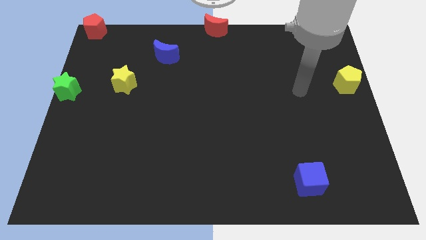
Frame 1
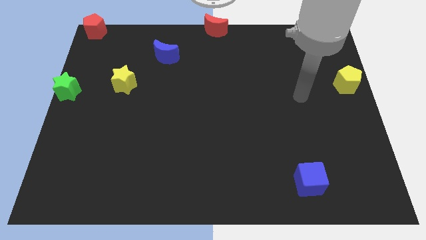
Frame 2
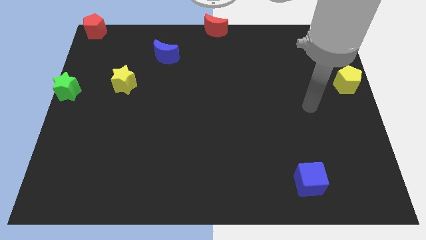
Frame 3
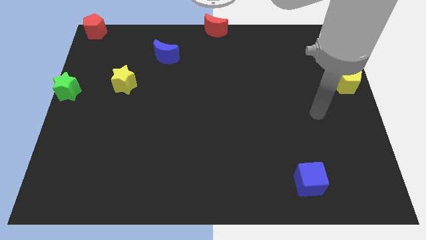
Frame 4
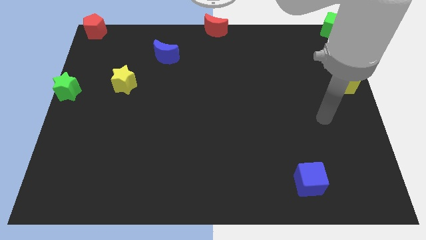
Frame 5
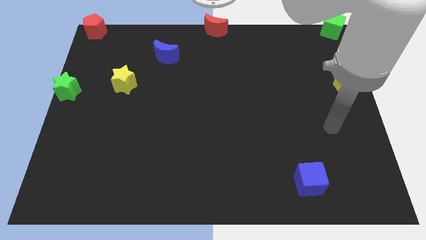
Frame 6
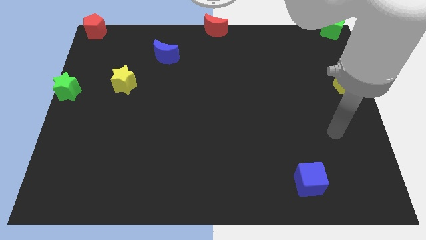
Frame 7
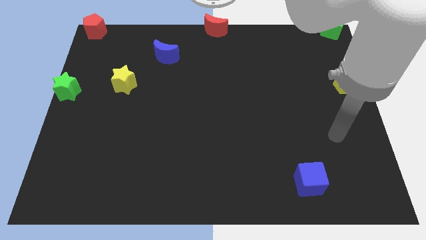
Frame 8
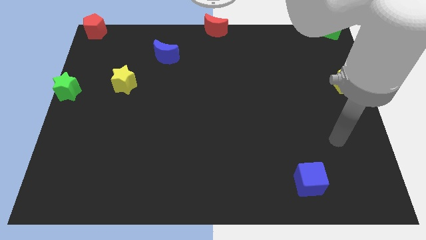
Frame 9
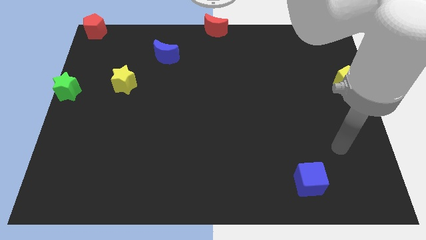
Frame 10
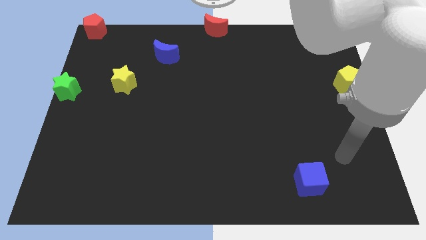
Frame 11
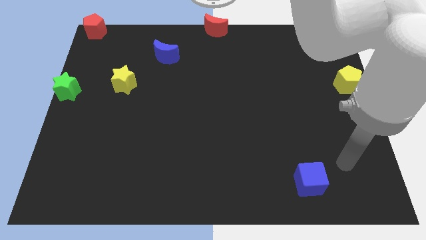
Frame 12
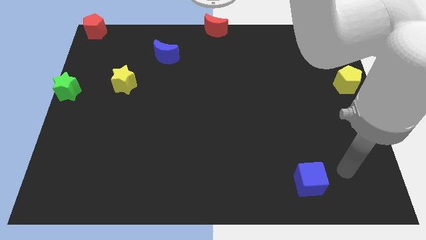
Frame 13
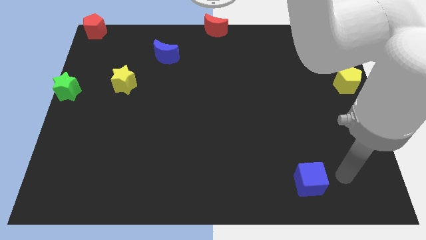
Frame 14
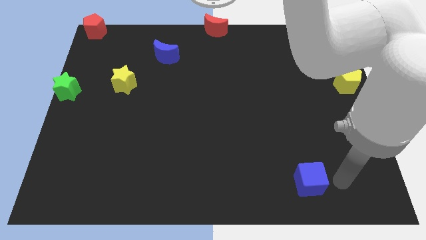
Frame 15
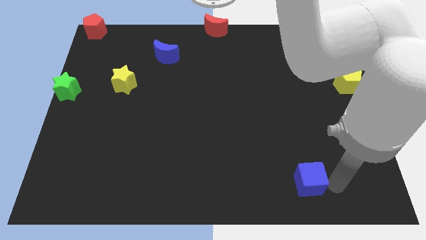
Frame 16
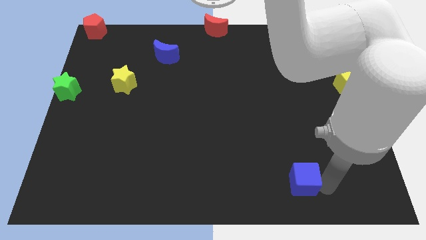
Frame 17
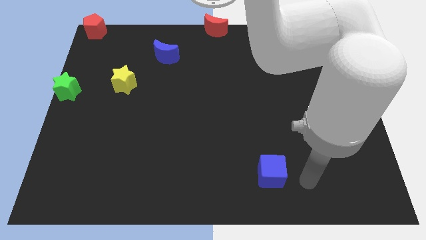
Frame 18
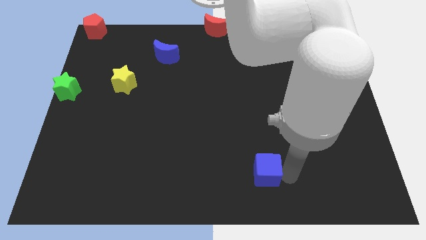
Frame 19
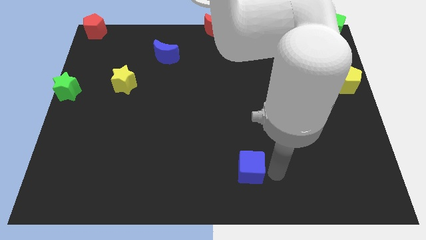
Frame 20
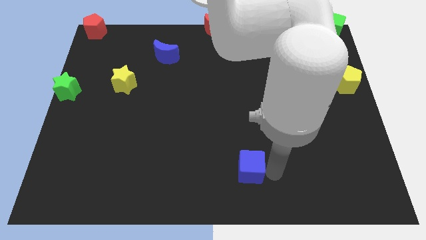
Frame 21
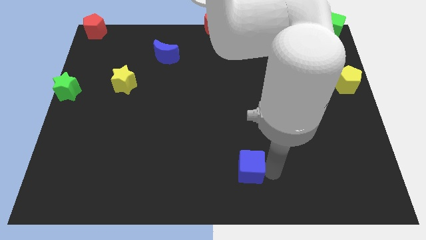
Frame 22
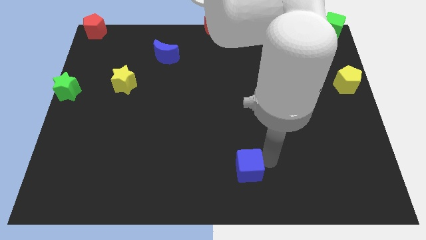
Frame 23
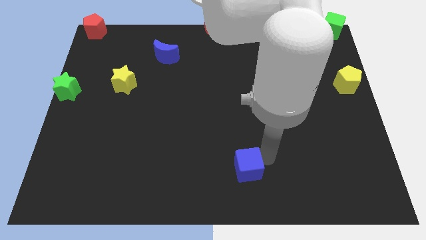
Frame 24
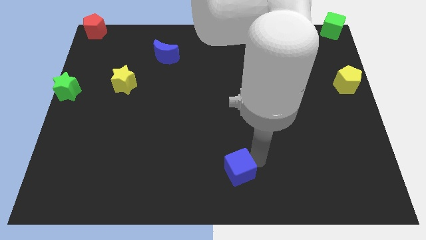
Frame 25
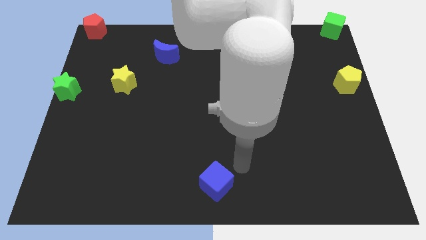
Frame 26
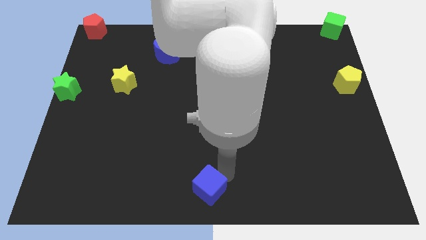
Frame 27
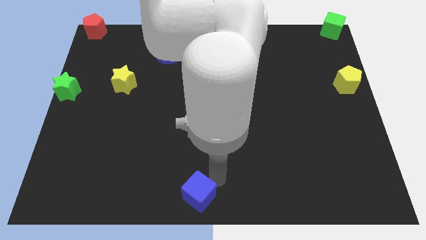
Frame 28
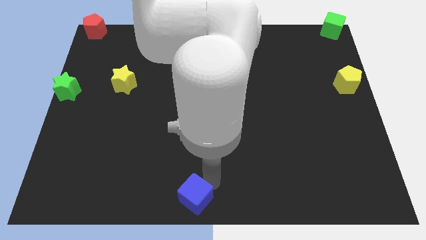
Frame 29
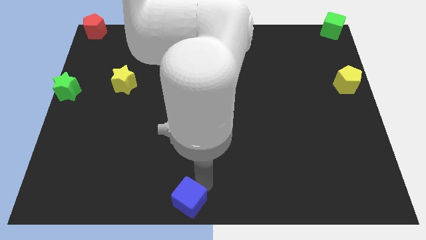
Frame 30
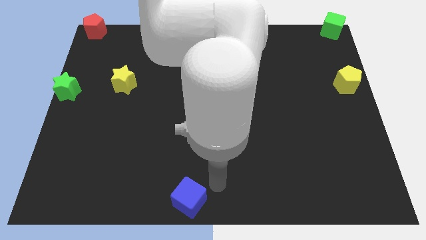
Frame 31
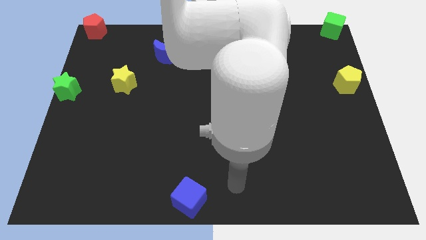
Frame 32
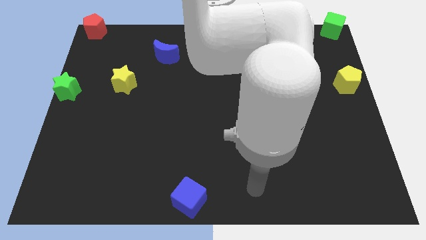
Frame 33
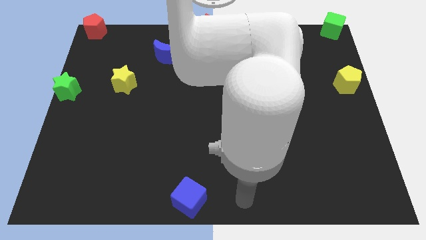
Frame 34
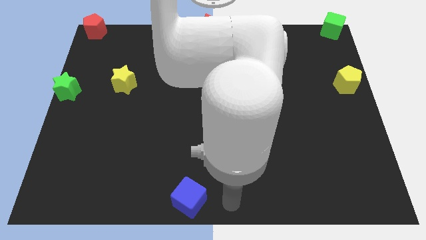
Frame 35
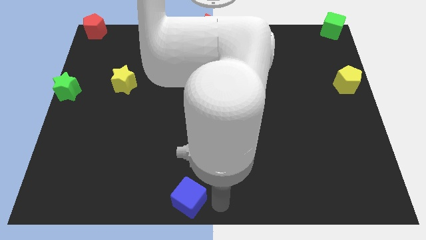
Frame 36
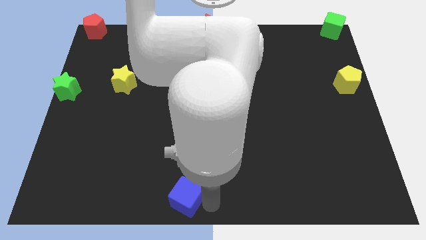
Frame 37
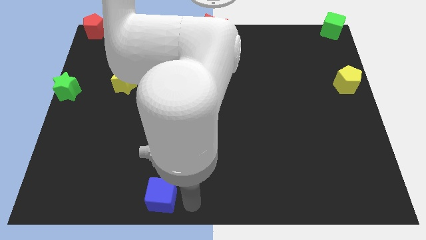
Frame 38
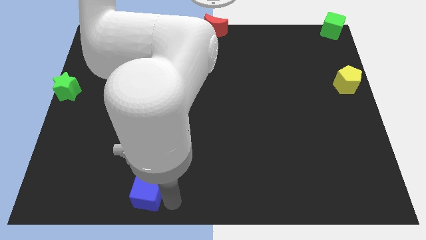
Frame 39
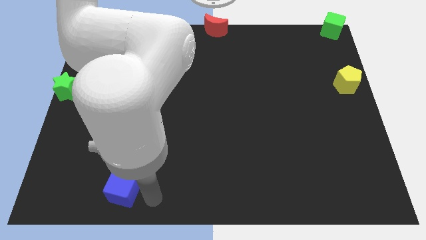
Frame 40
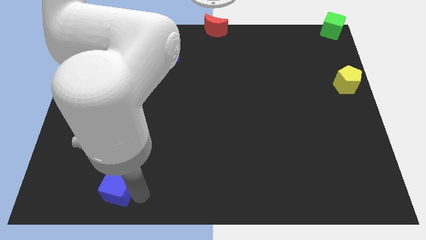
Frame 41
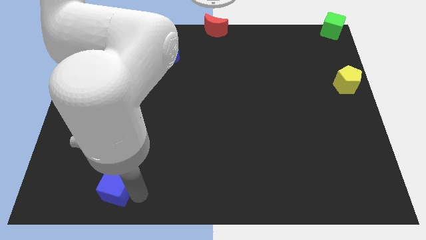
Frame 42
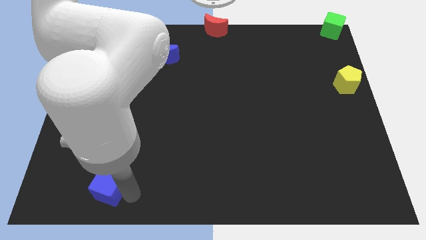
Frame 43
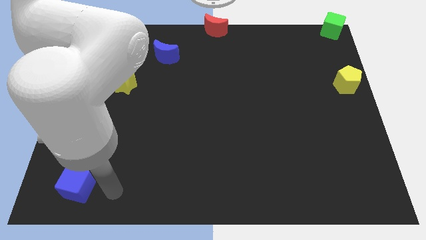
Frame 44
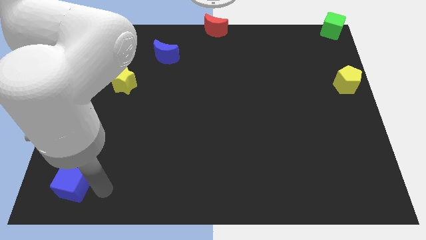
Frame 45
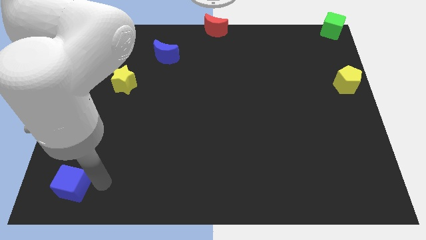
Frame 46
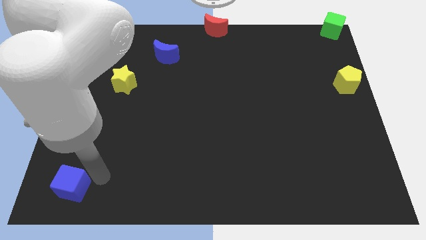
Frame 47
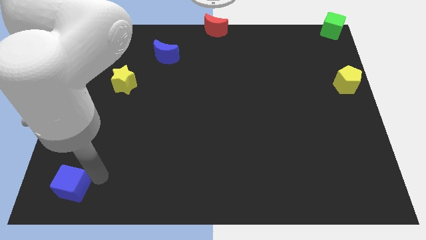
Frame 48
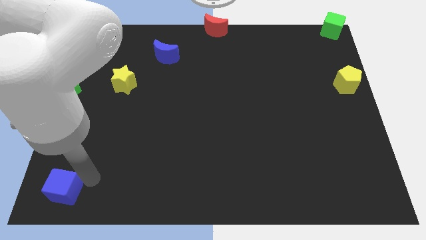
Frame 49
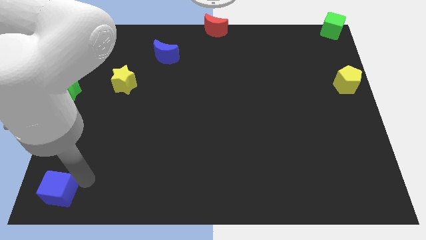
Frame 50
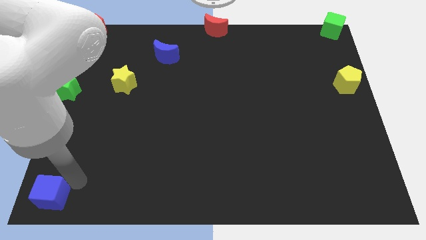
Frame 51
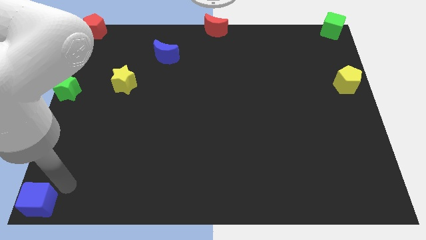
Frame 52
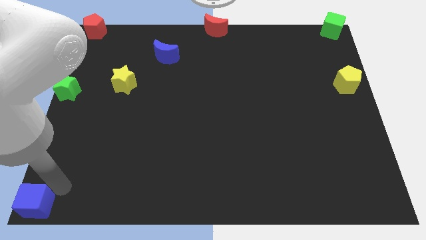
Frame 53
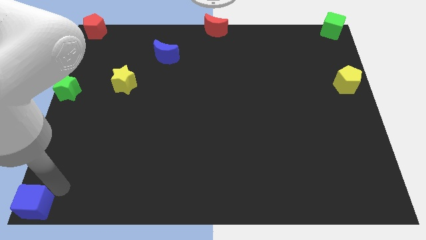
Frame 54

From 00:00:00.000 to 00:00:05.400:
place the blue cube at the bottom left corner of the board

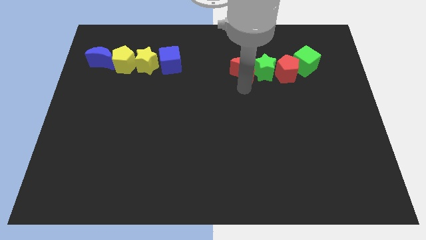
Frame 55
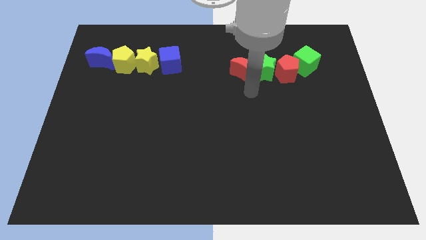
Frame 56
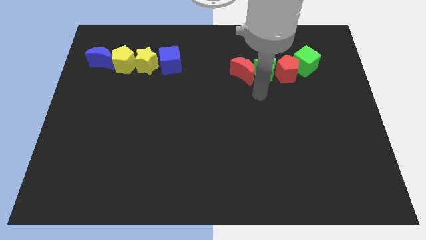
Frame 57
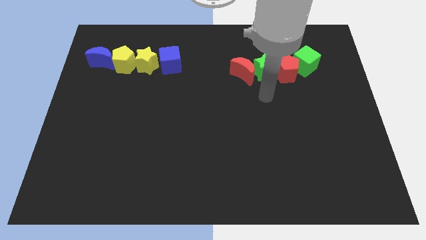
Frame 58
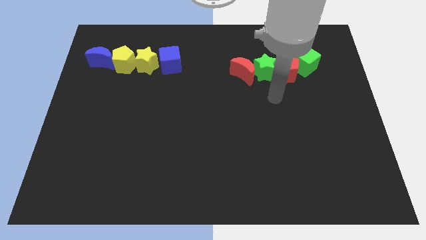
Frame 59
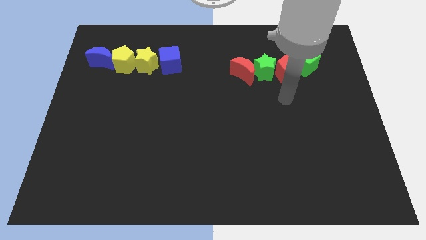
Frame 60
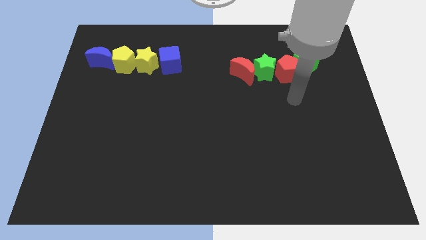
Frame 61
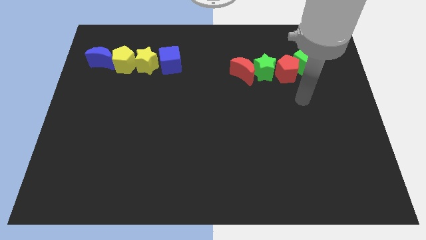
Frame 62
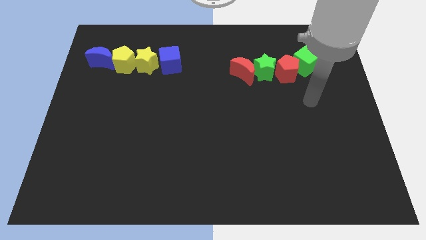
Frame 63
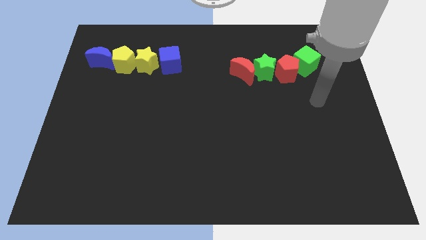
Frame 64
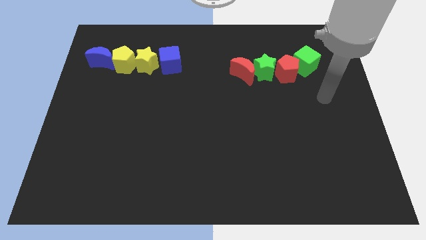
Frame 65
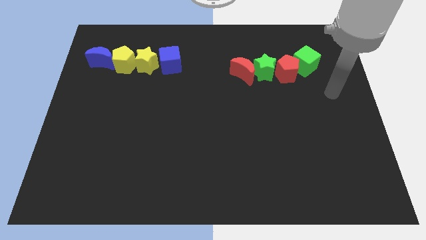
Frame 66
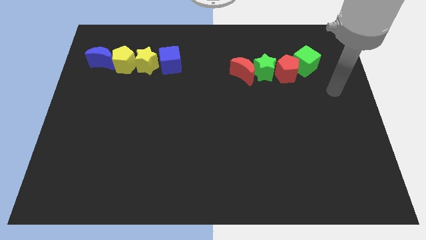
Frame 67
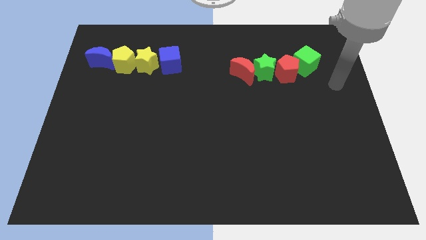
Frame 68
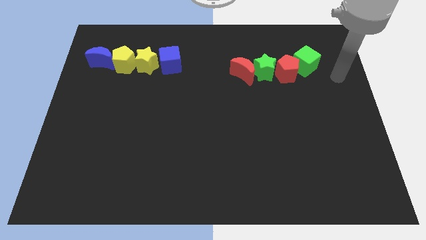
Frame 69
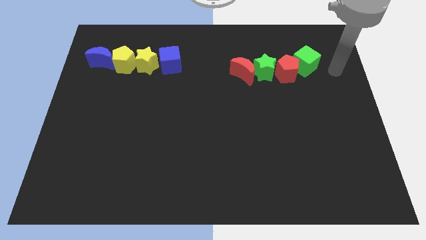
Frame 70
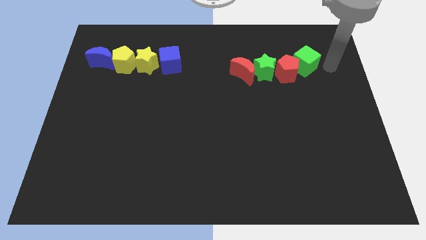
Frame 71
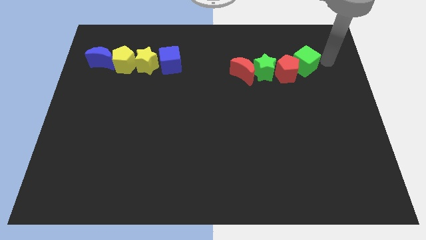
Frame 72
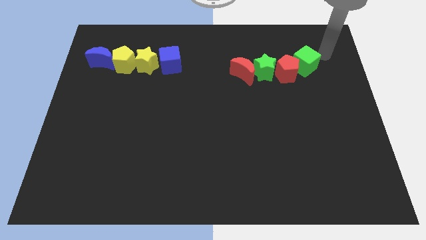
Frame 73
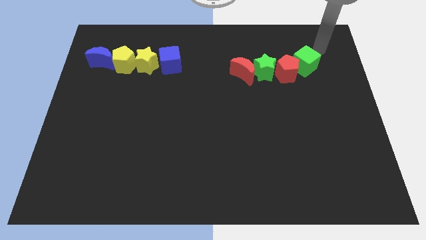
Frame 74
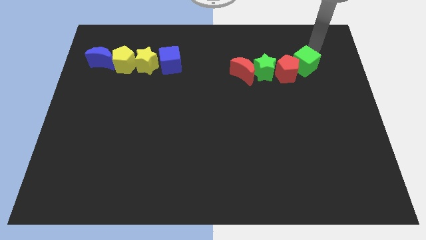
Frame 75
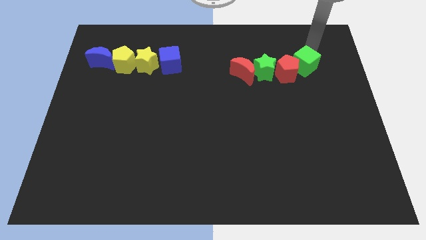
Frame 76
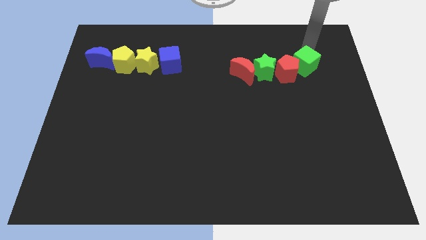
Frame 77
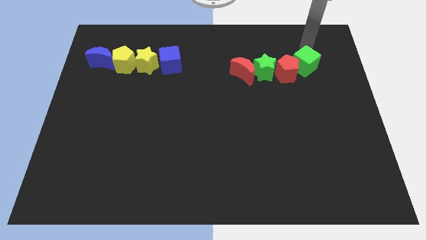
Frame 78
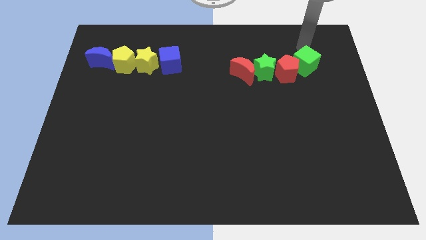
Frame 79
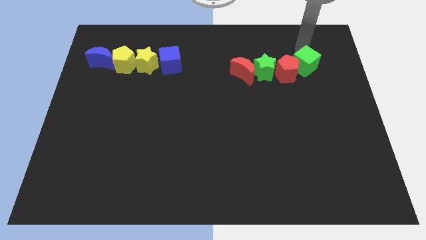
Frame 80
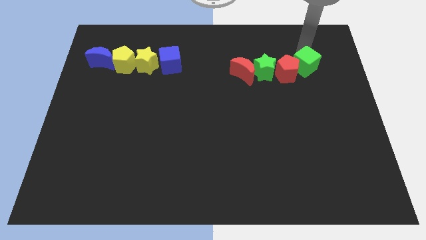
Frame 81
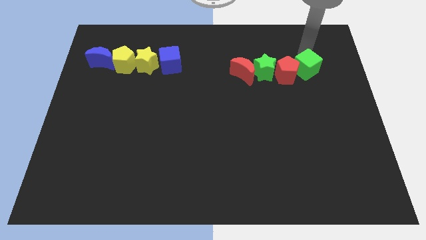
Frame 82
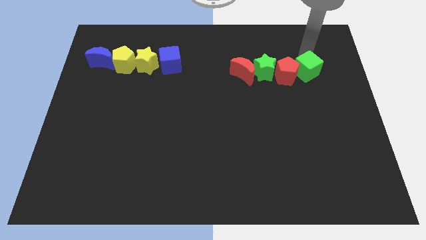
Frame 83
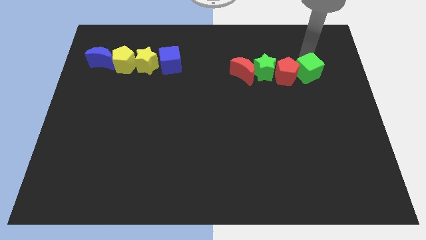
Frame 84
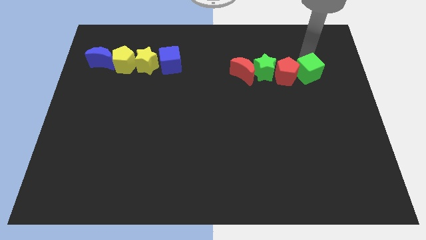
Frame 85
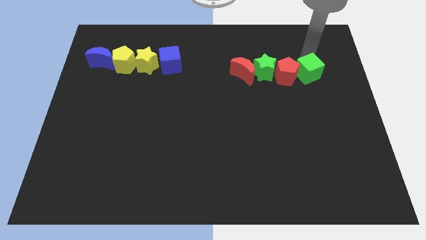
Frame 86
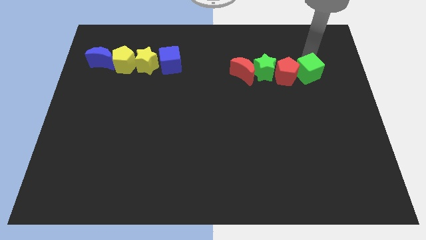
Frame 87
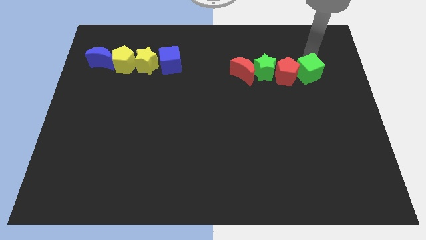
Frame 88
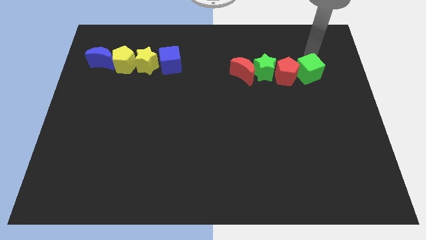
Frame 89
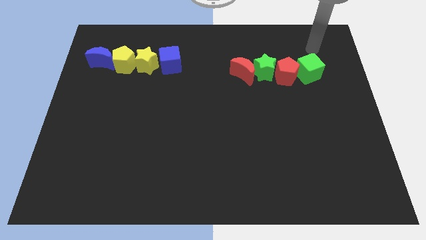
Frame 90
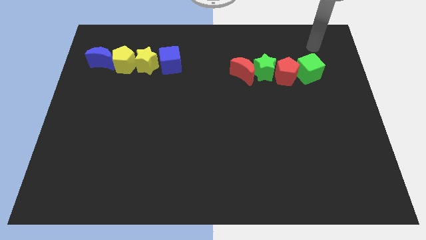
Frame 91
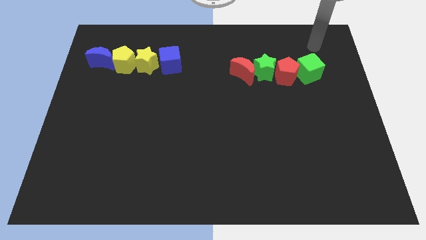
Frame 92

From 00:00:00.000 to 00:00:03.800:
slightly push the green cube to the right of red pentagon
